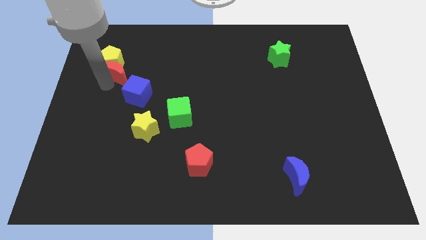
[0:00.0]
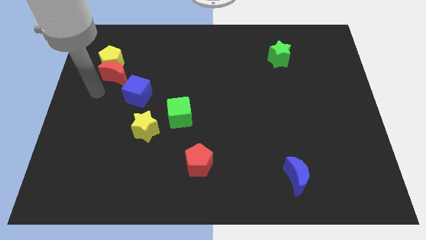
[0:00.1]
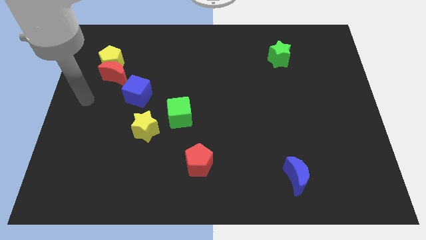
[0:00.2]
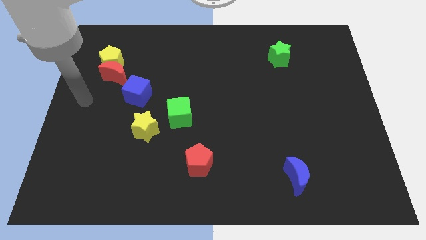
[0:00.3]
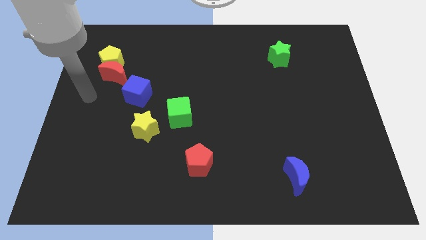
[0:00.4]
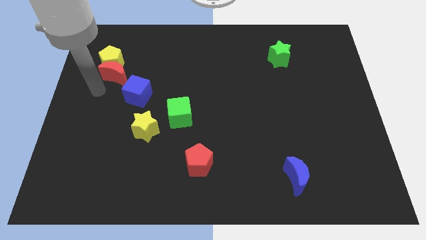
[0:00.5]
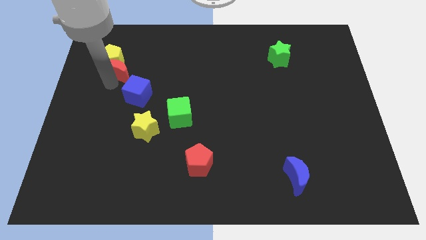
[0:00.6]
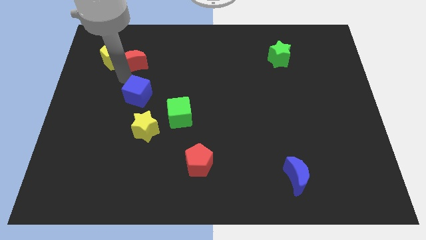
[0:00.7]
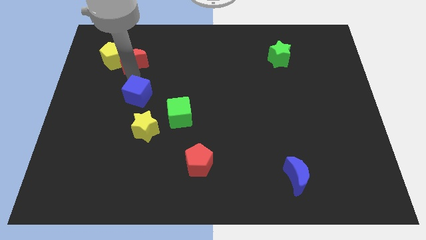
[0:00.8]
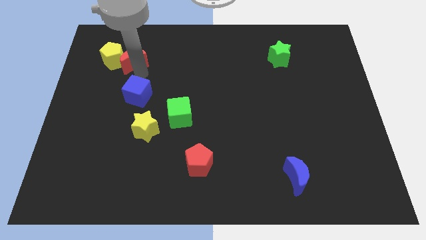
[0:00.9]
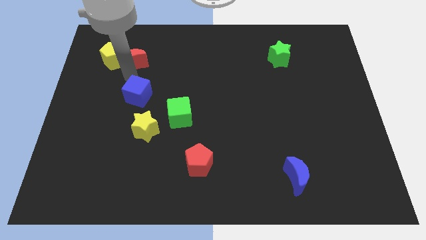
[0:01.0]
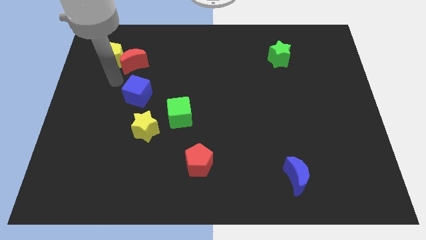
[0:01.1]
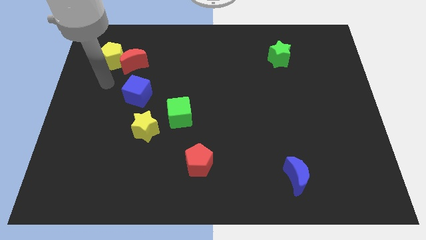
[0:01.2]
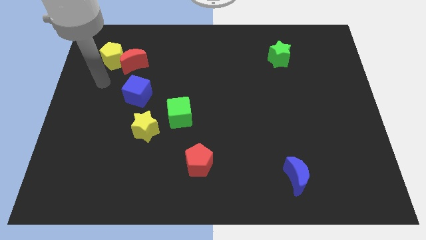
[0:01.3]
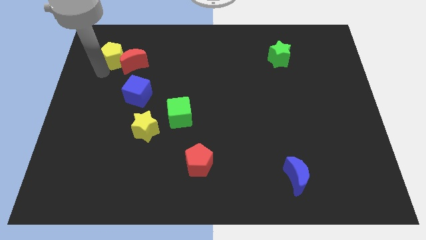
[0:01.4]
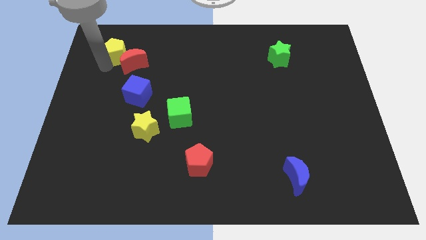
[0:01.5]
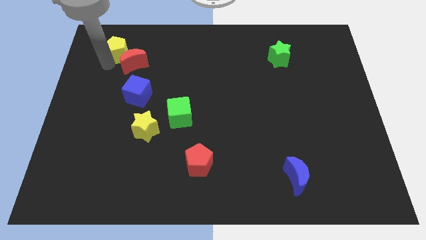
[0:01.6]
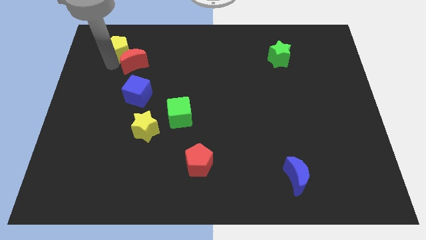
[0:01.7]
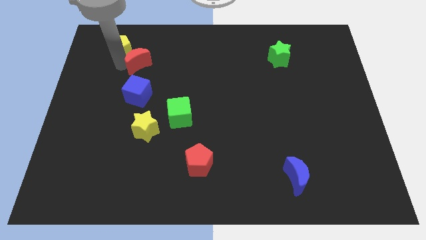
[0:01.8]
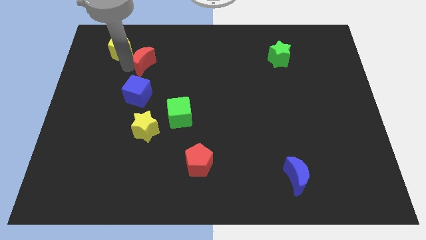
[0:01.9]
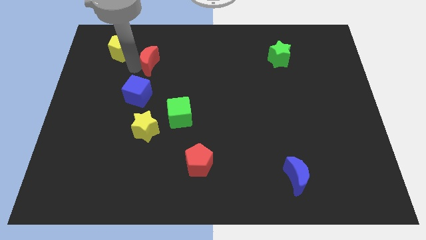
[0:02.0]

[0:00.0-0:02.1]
separate red moon from yellow pentagon

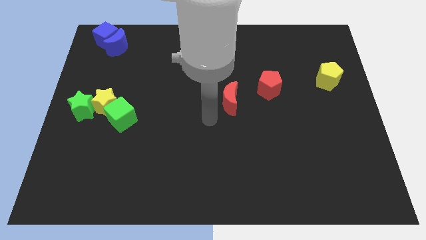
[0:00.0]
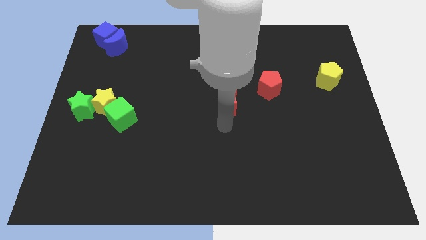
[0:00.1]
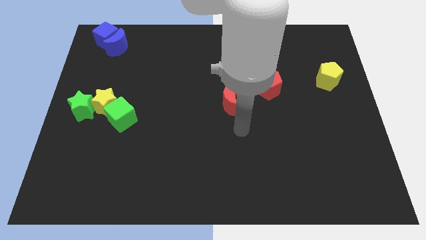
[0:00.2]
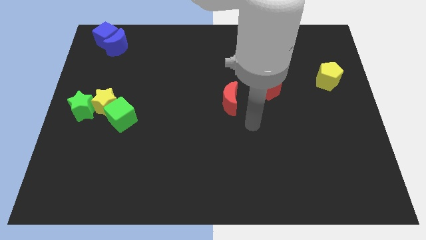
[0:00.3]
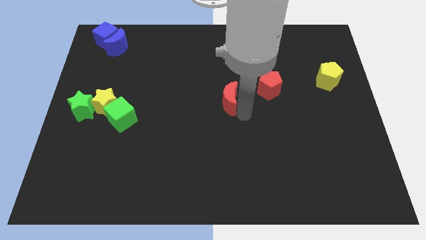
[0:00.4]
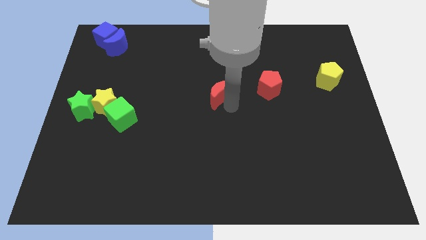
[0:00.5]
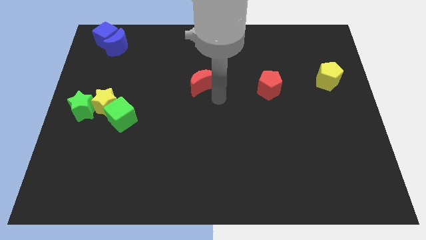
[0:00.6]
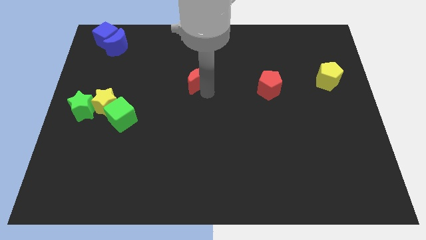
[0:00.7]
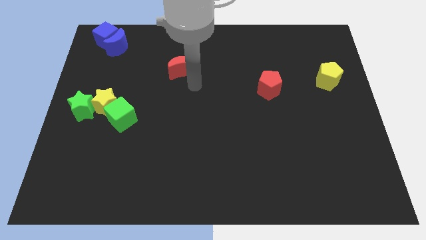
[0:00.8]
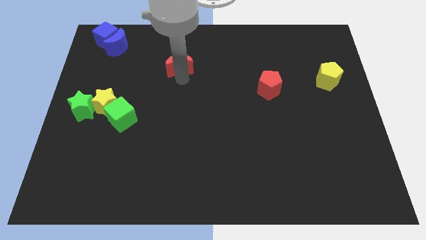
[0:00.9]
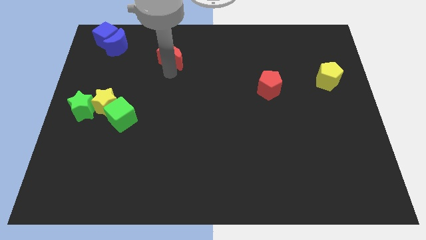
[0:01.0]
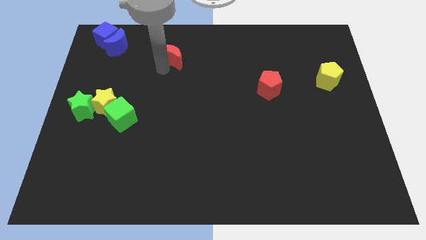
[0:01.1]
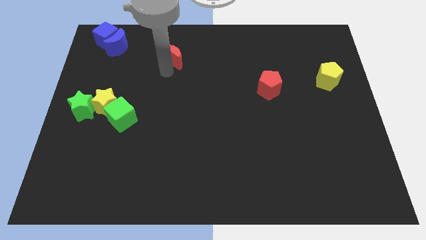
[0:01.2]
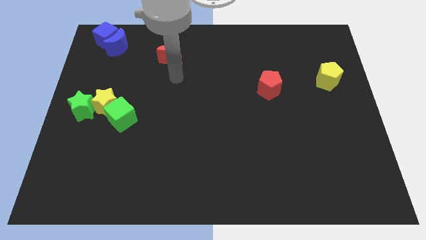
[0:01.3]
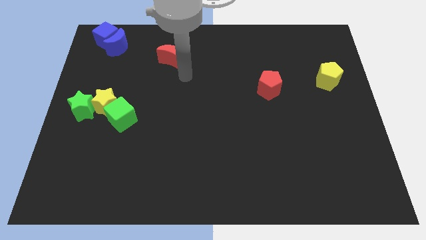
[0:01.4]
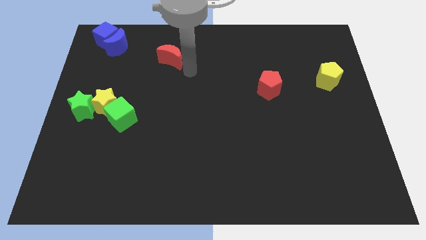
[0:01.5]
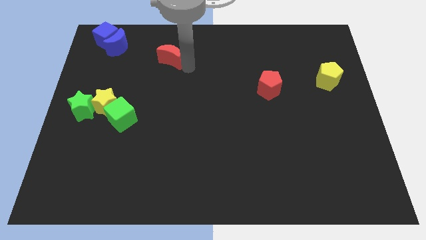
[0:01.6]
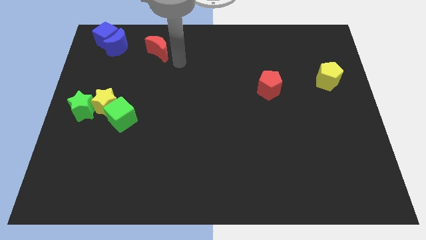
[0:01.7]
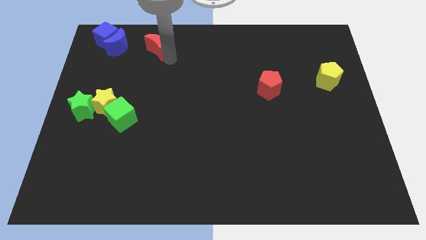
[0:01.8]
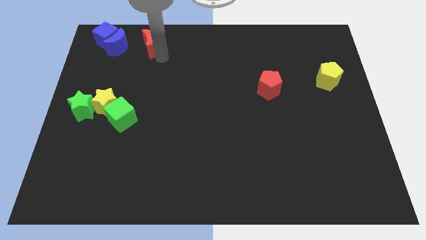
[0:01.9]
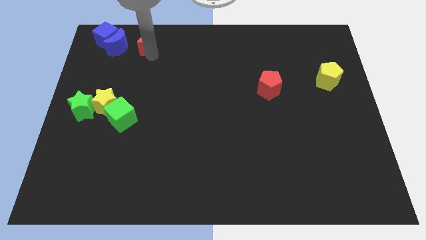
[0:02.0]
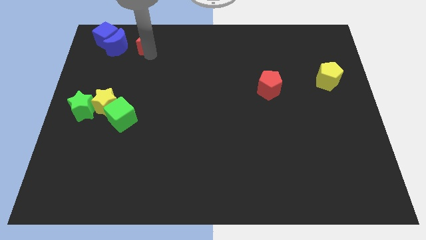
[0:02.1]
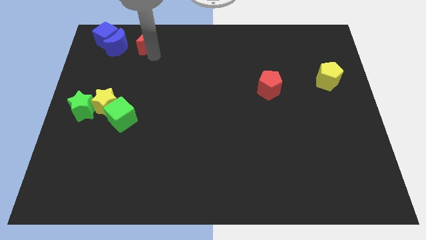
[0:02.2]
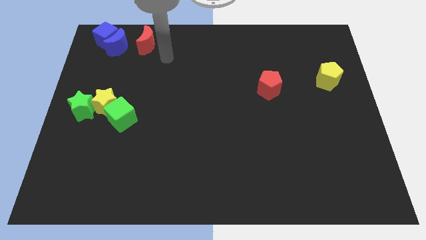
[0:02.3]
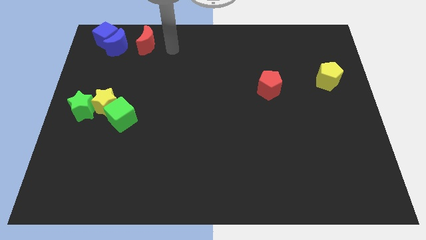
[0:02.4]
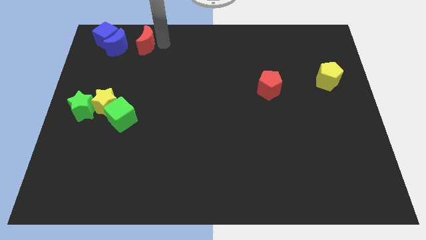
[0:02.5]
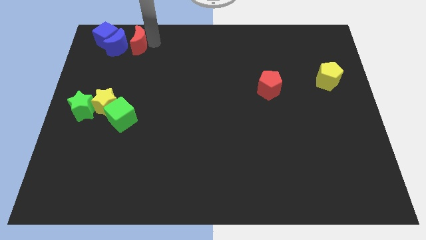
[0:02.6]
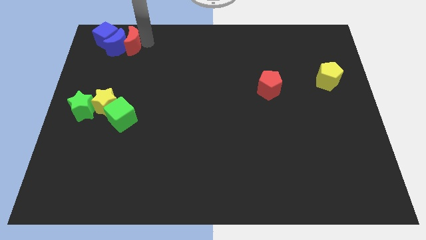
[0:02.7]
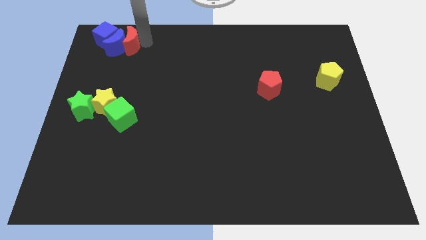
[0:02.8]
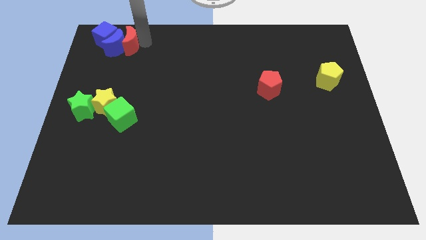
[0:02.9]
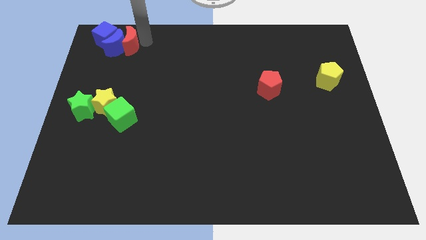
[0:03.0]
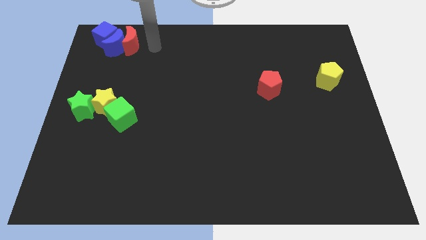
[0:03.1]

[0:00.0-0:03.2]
push the red crescent close to the blue crescent

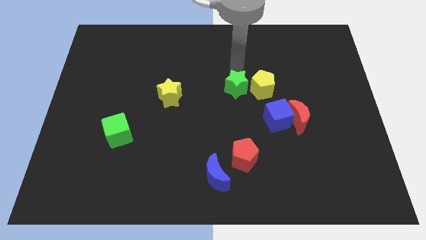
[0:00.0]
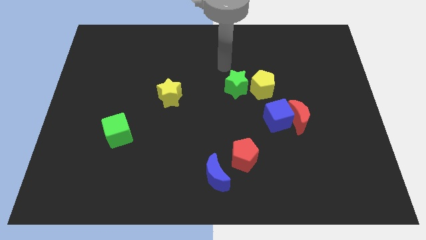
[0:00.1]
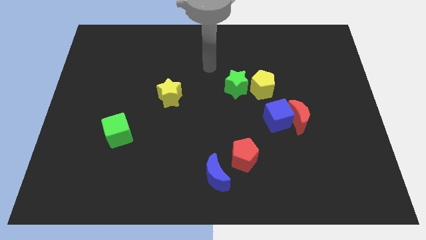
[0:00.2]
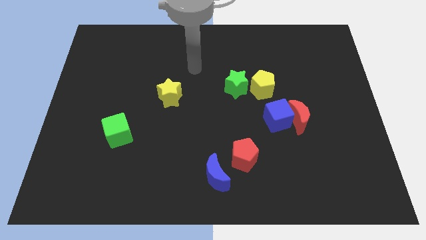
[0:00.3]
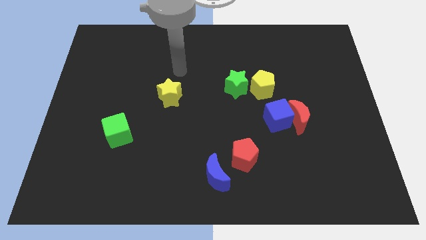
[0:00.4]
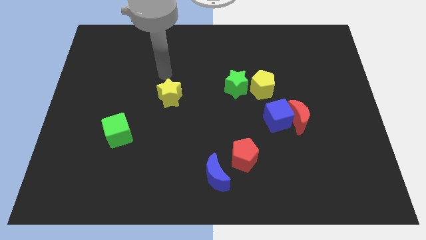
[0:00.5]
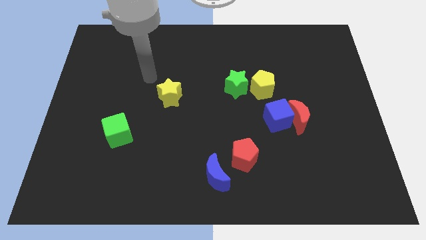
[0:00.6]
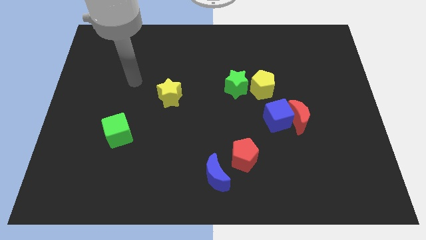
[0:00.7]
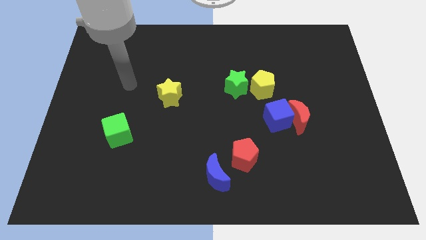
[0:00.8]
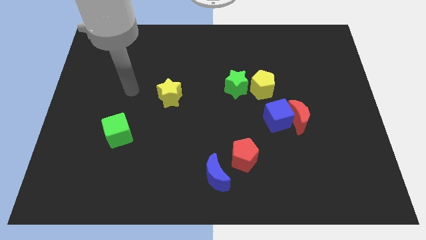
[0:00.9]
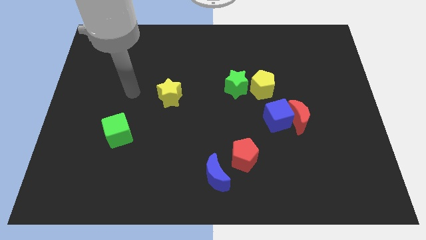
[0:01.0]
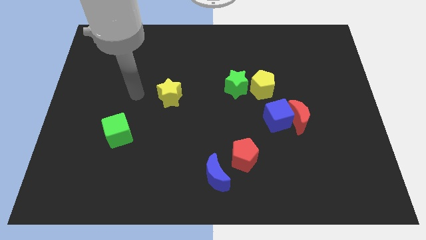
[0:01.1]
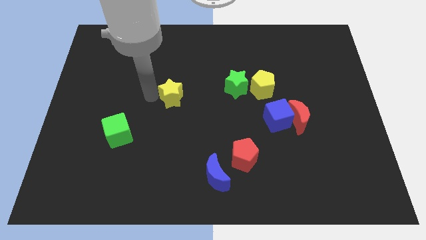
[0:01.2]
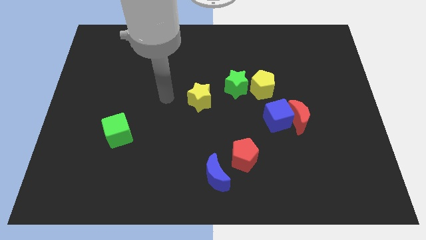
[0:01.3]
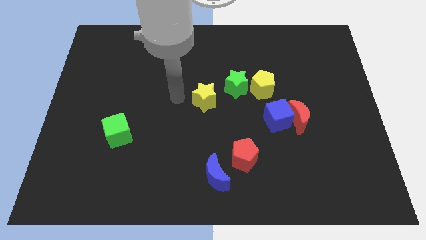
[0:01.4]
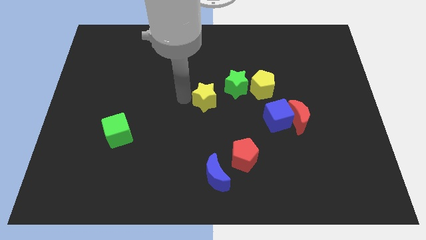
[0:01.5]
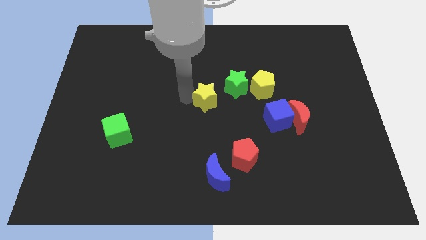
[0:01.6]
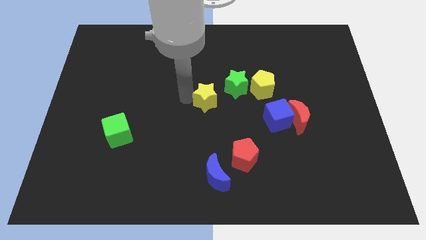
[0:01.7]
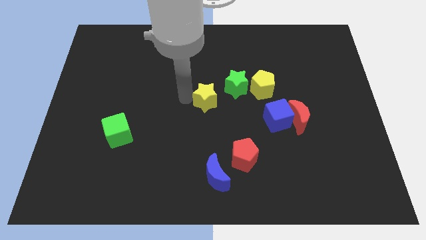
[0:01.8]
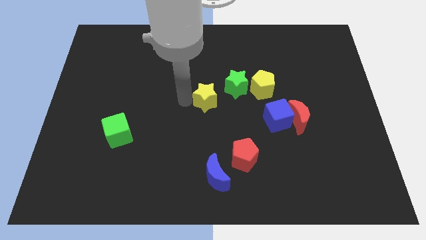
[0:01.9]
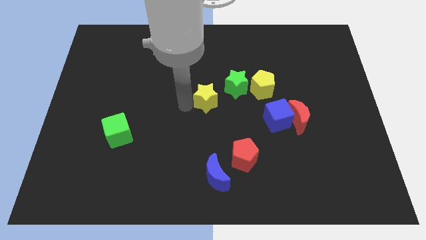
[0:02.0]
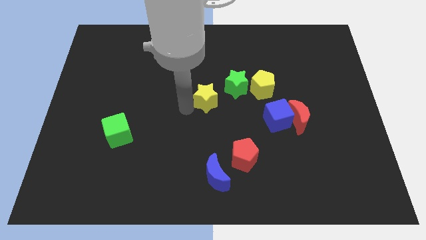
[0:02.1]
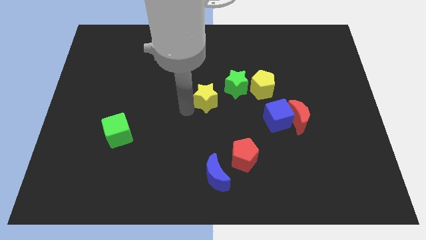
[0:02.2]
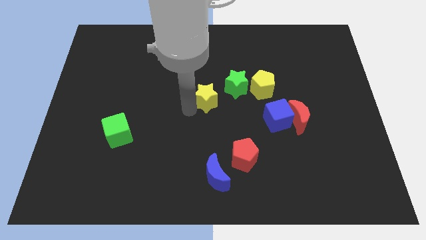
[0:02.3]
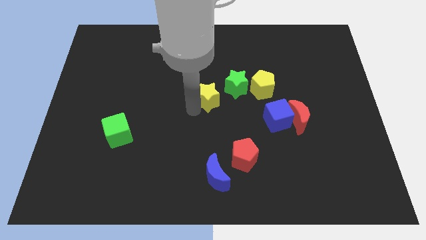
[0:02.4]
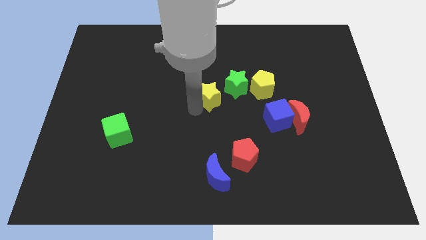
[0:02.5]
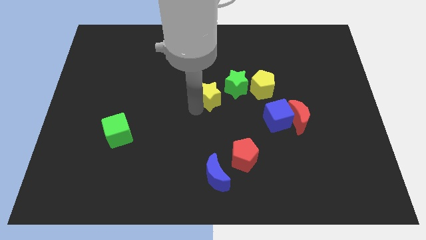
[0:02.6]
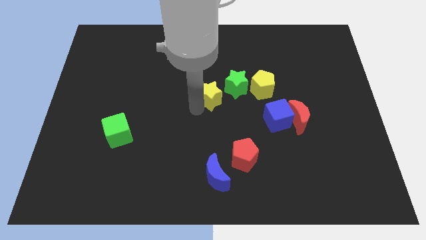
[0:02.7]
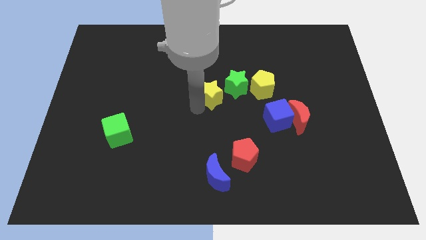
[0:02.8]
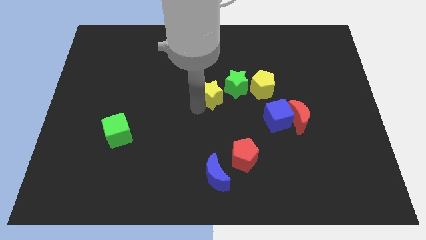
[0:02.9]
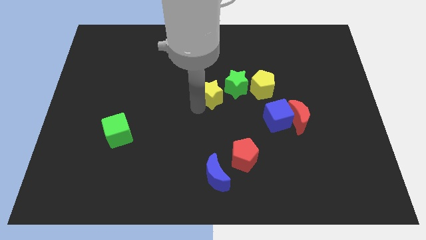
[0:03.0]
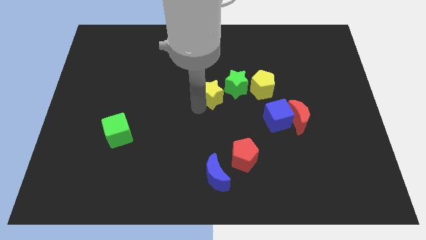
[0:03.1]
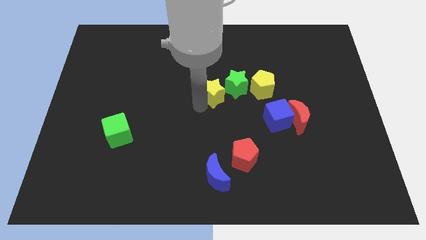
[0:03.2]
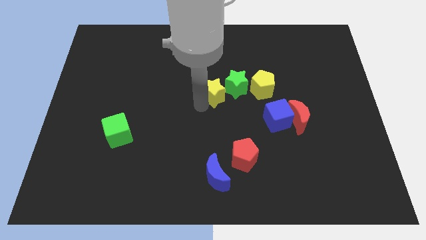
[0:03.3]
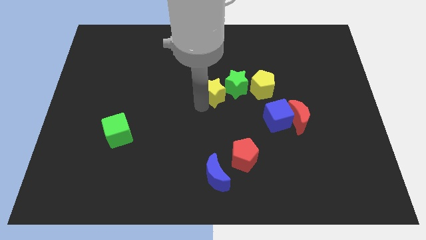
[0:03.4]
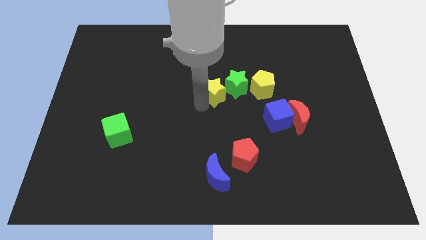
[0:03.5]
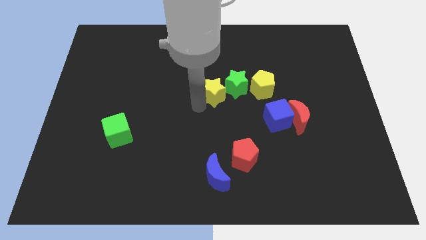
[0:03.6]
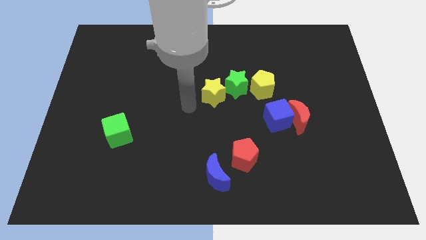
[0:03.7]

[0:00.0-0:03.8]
move the yellow star close to the green star
